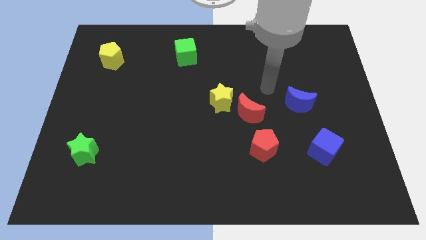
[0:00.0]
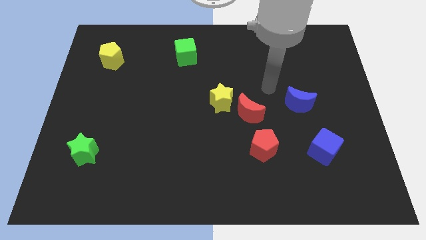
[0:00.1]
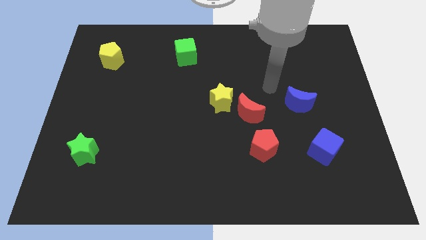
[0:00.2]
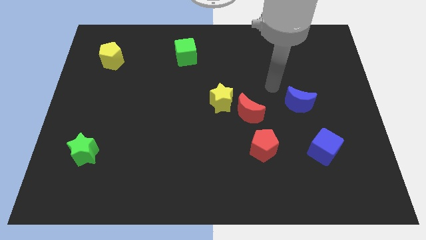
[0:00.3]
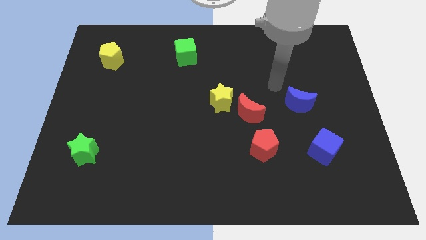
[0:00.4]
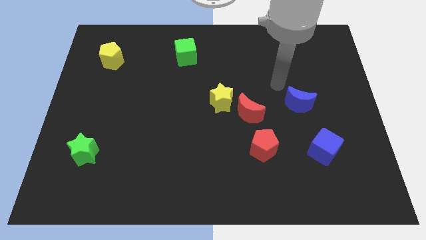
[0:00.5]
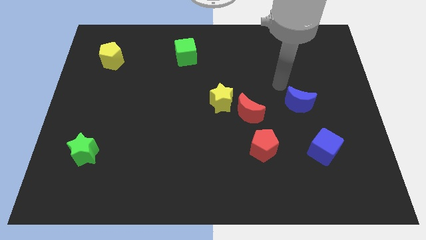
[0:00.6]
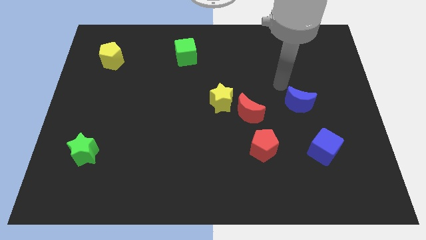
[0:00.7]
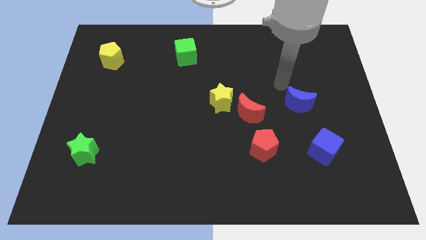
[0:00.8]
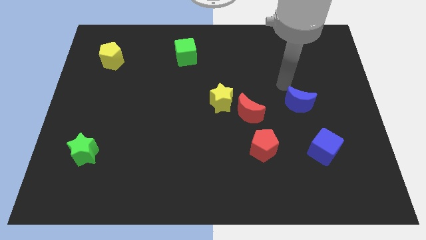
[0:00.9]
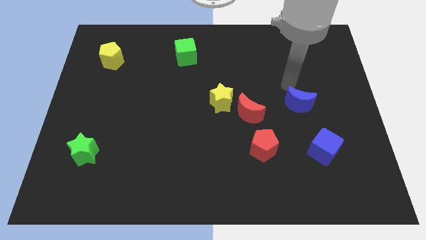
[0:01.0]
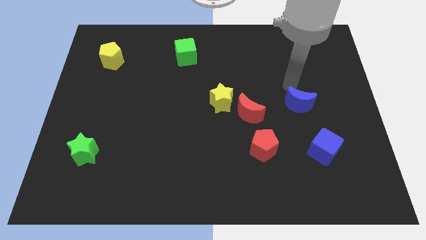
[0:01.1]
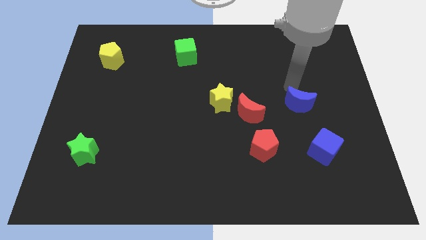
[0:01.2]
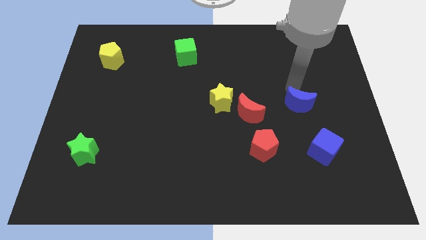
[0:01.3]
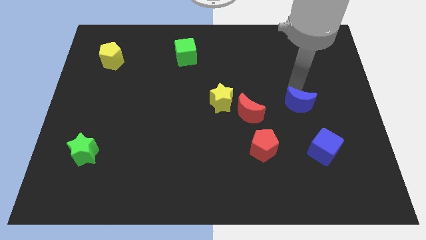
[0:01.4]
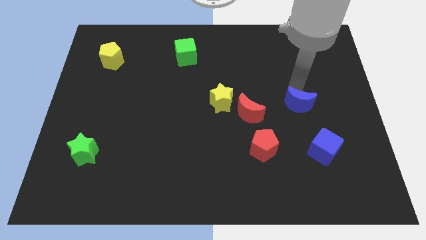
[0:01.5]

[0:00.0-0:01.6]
place ypur arm above blue crescent

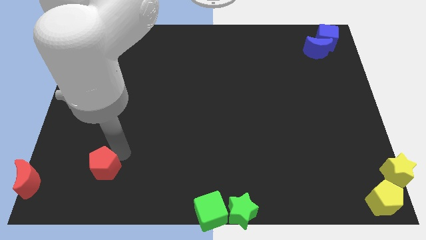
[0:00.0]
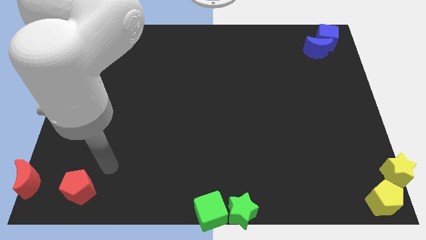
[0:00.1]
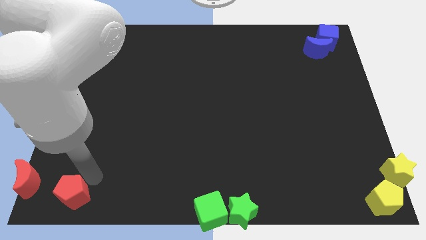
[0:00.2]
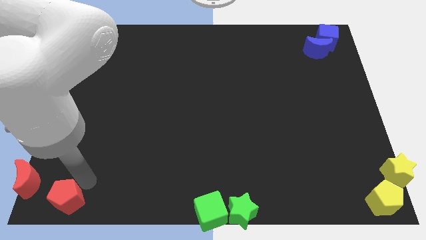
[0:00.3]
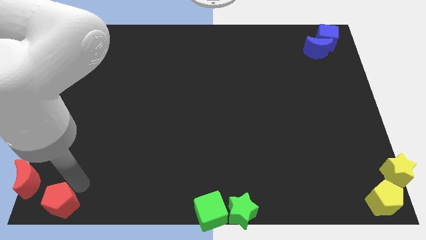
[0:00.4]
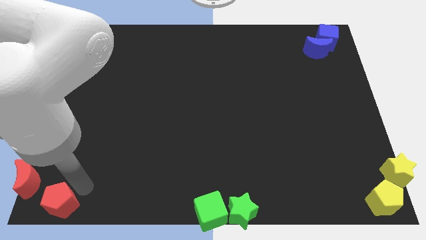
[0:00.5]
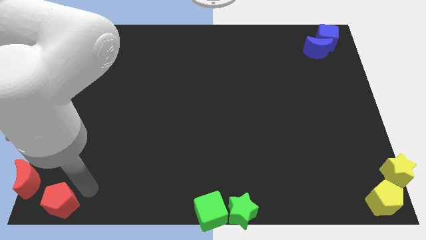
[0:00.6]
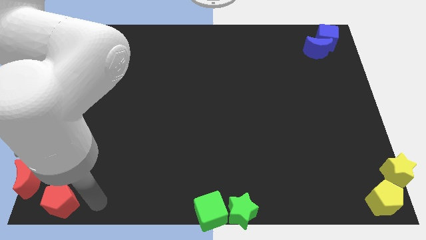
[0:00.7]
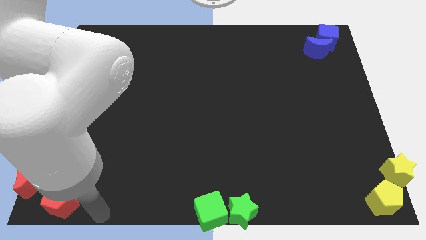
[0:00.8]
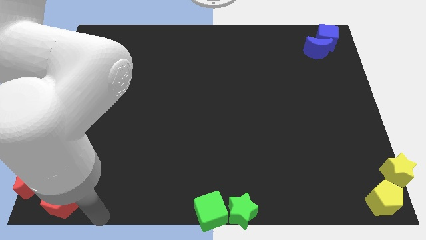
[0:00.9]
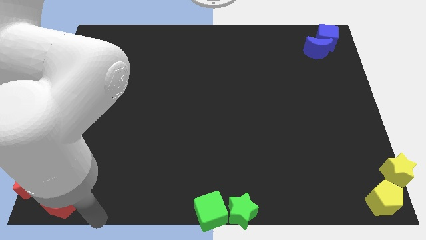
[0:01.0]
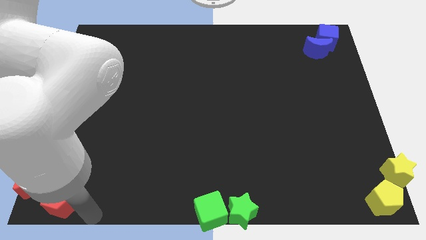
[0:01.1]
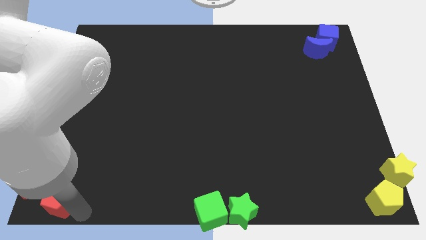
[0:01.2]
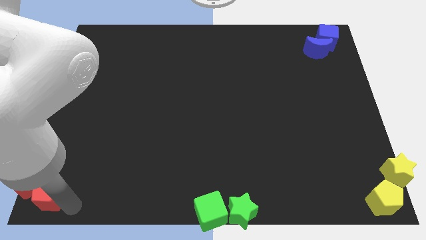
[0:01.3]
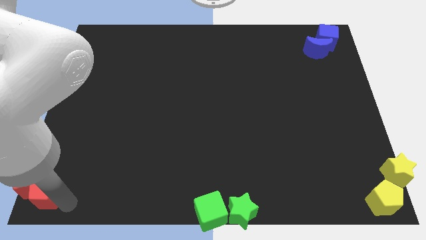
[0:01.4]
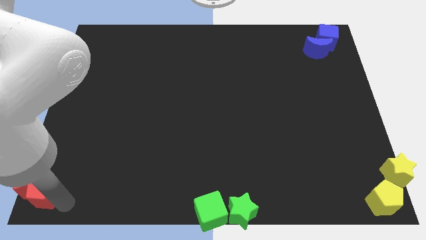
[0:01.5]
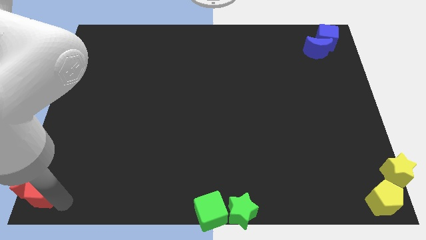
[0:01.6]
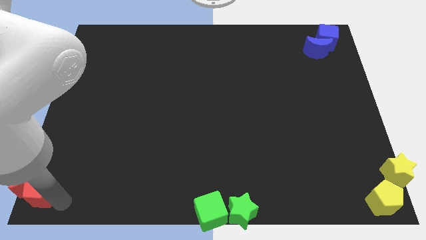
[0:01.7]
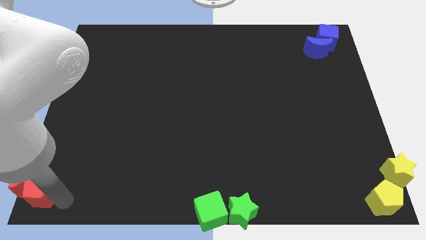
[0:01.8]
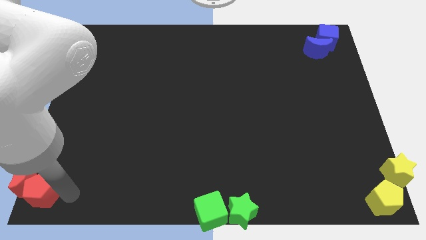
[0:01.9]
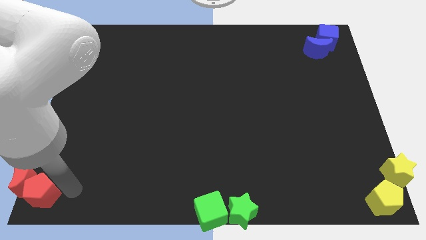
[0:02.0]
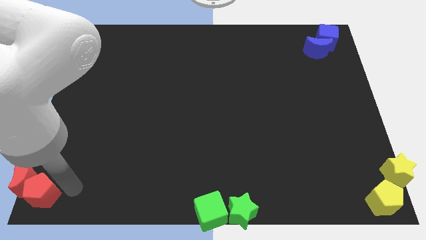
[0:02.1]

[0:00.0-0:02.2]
place the red blocks to the bottom left corner of the board

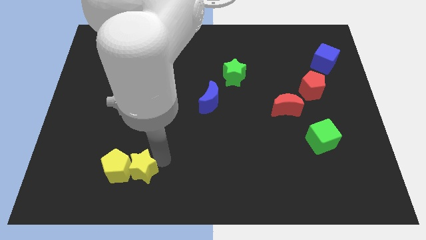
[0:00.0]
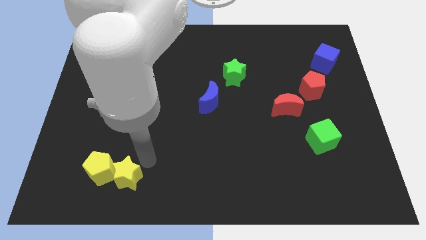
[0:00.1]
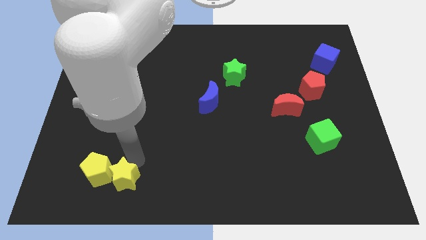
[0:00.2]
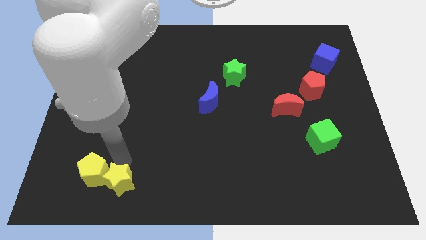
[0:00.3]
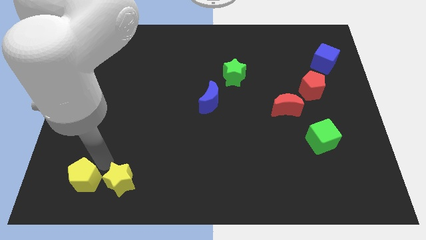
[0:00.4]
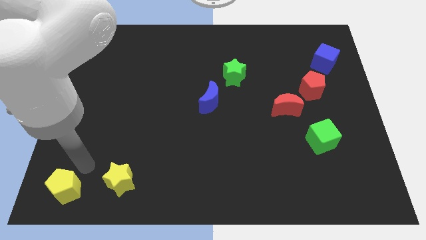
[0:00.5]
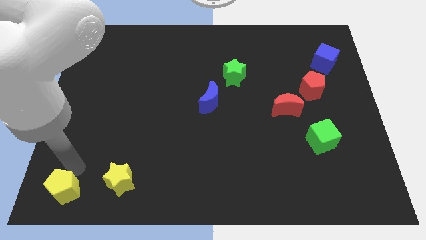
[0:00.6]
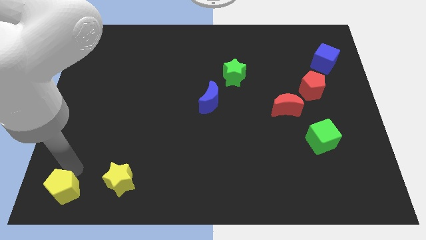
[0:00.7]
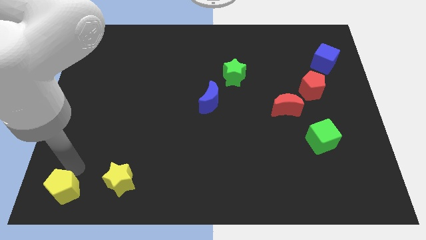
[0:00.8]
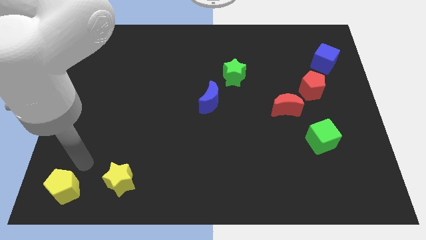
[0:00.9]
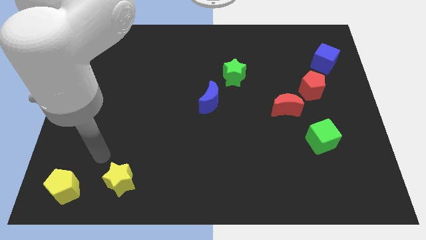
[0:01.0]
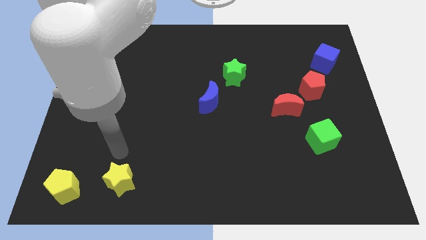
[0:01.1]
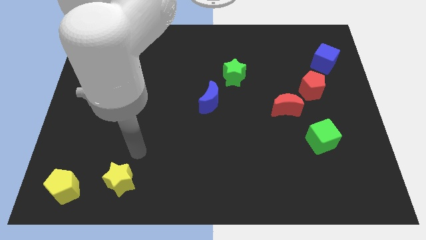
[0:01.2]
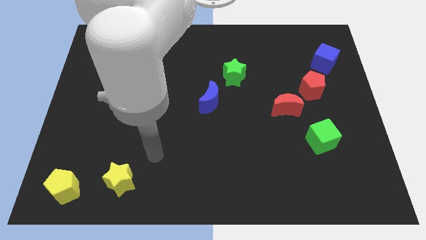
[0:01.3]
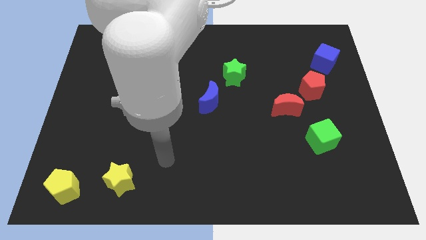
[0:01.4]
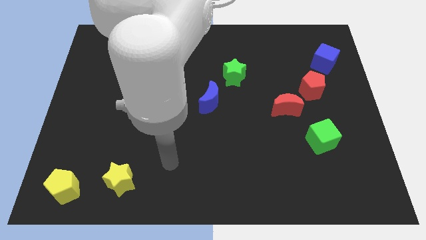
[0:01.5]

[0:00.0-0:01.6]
separate the yellow blocks

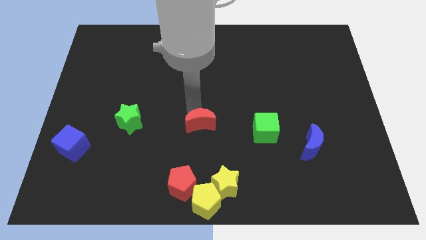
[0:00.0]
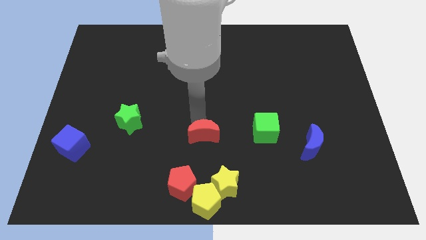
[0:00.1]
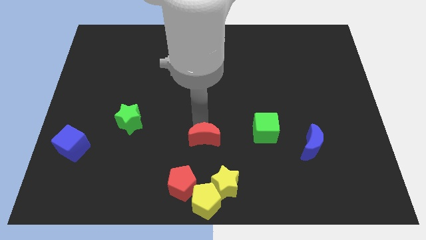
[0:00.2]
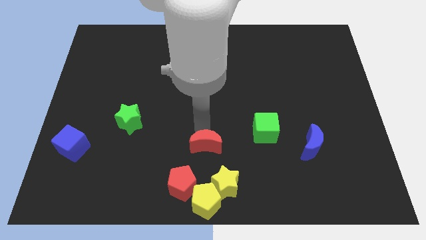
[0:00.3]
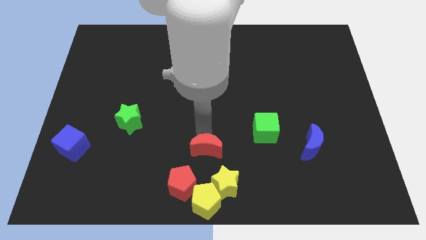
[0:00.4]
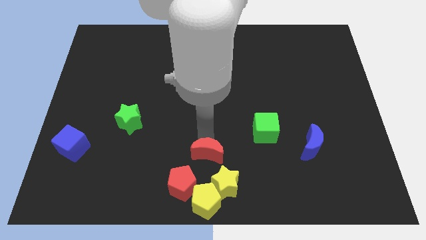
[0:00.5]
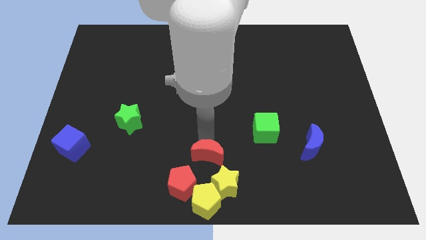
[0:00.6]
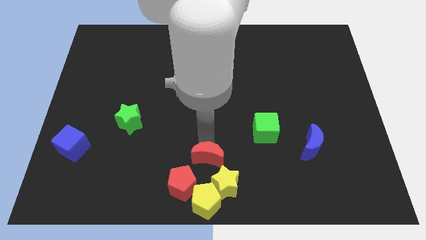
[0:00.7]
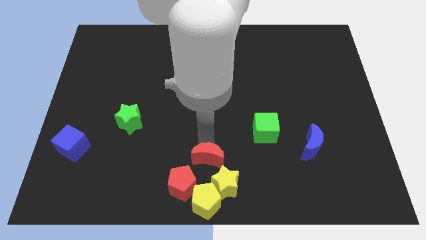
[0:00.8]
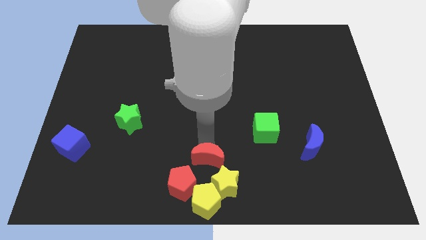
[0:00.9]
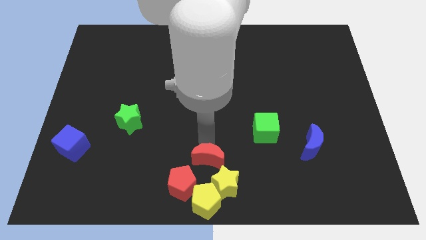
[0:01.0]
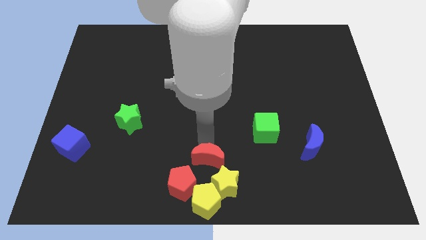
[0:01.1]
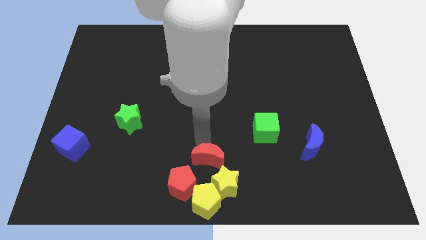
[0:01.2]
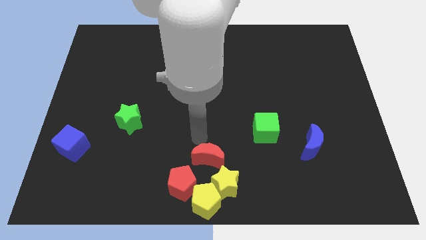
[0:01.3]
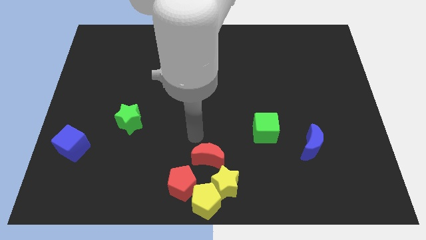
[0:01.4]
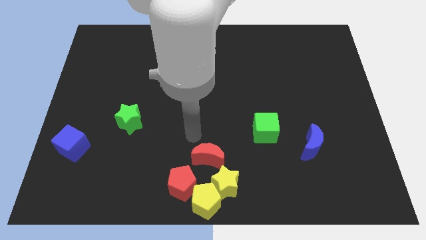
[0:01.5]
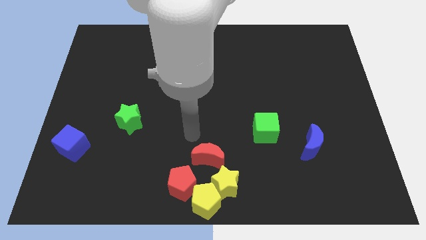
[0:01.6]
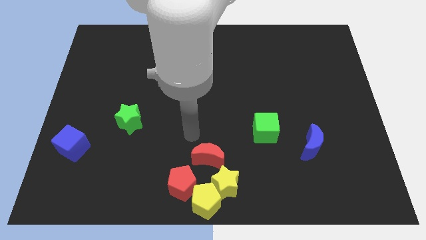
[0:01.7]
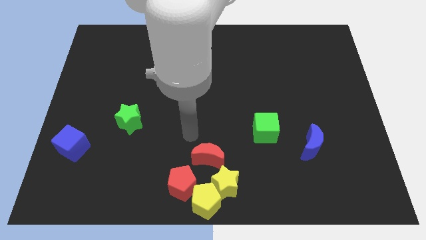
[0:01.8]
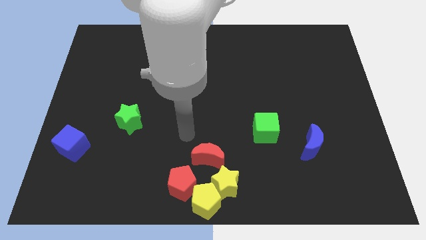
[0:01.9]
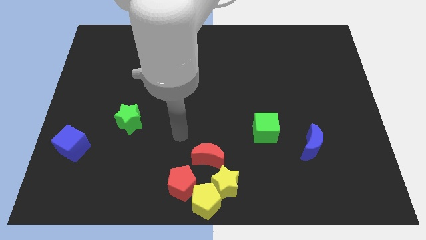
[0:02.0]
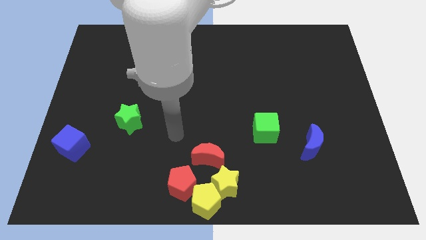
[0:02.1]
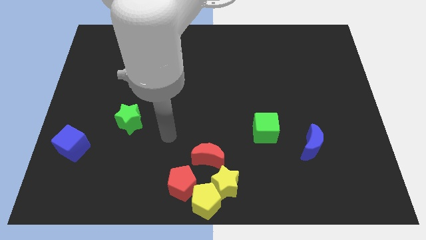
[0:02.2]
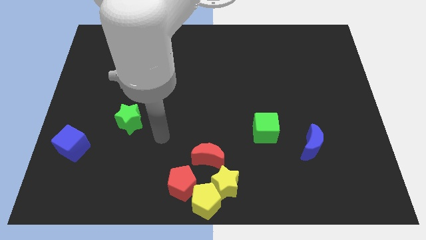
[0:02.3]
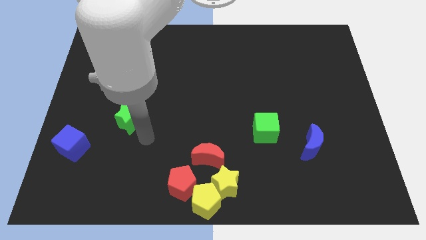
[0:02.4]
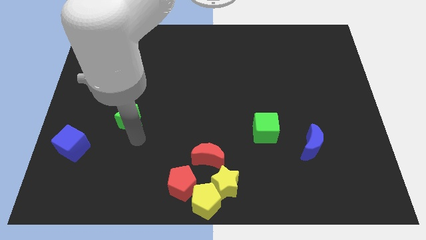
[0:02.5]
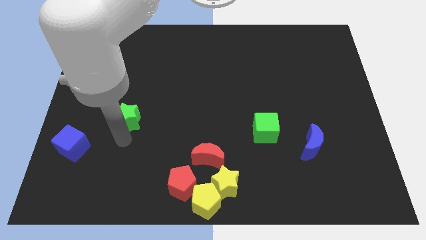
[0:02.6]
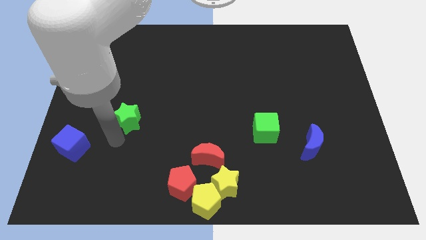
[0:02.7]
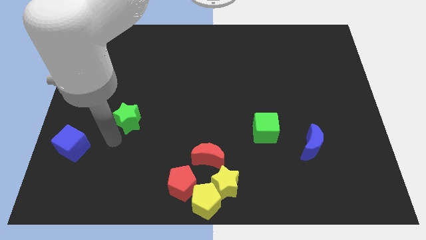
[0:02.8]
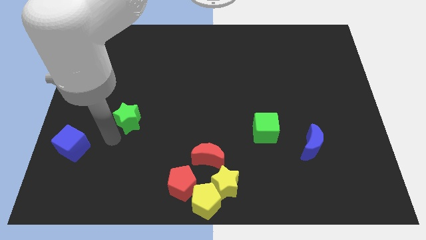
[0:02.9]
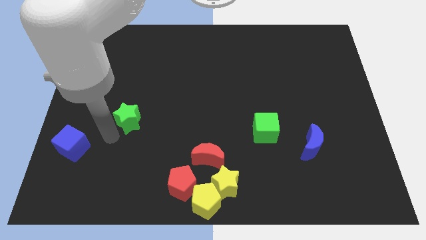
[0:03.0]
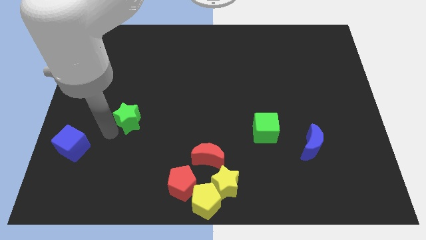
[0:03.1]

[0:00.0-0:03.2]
move the red crescent close to the yellow star

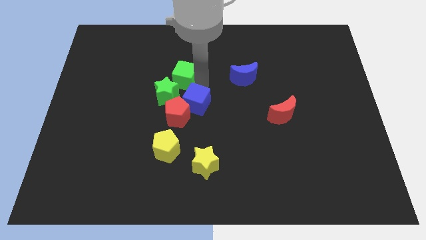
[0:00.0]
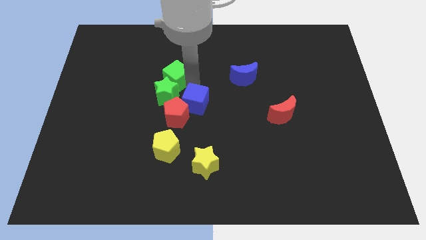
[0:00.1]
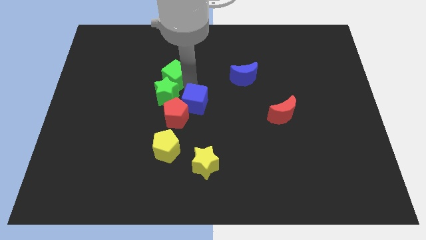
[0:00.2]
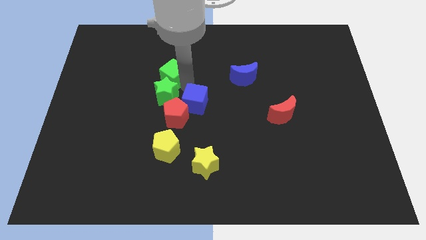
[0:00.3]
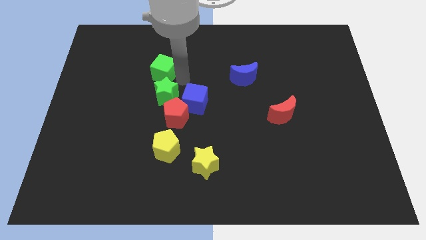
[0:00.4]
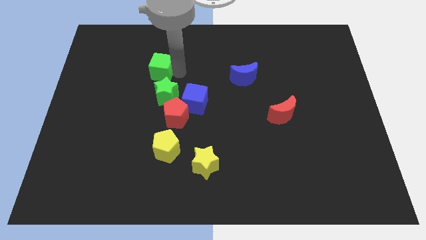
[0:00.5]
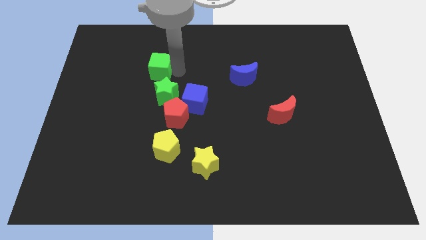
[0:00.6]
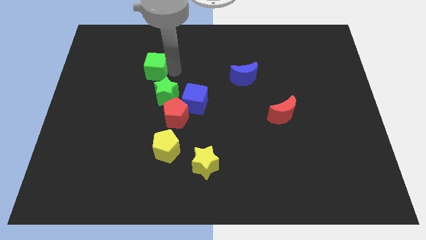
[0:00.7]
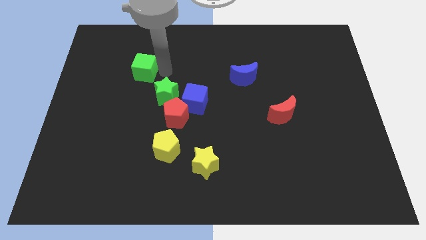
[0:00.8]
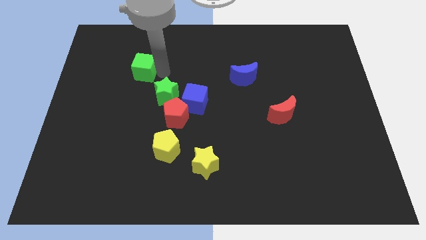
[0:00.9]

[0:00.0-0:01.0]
separate the green cube from the blue cube
